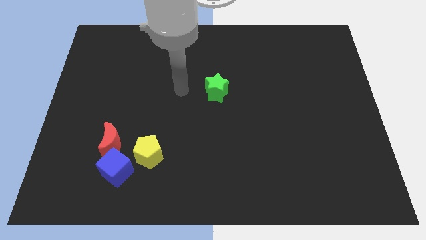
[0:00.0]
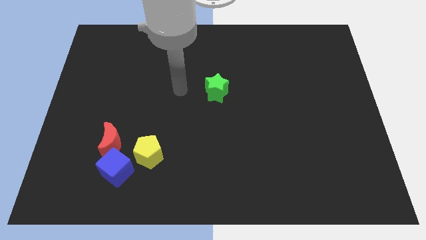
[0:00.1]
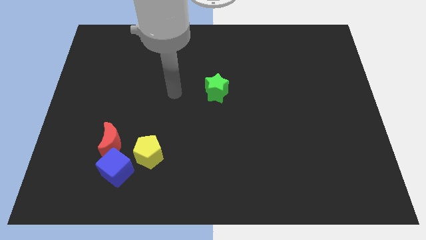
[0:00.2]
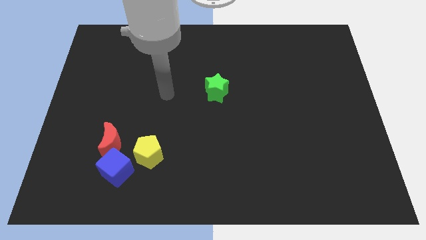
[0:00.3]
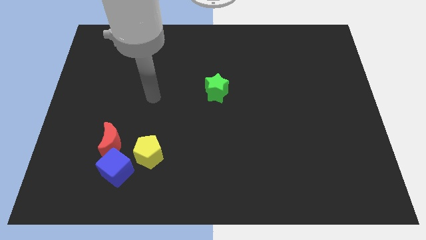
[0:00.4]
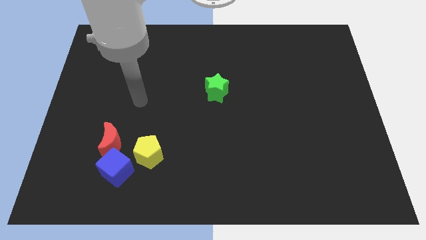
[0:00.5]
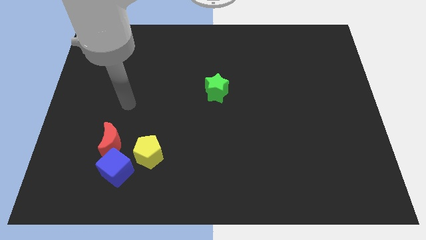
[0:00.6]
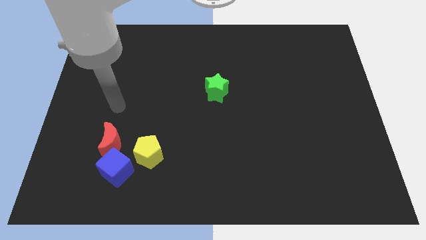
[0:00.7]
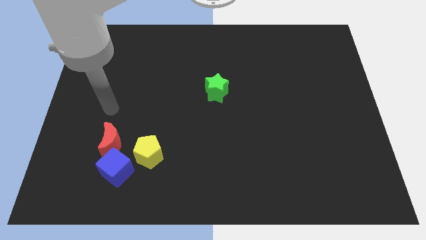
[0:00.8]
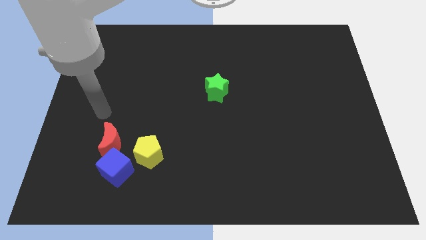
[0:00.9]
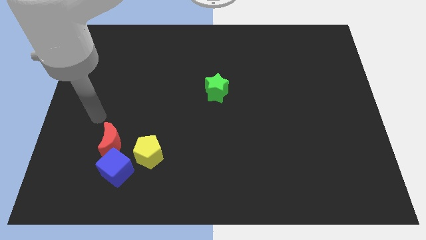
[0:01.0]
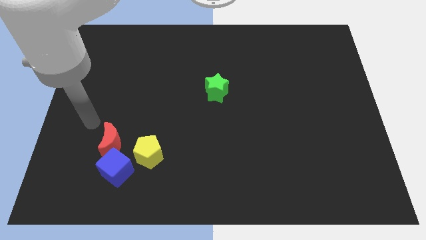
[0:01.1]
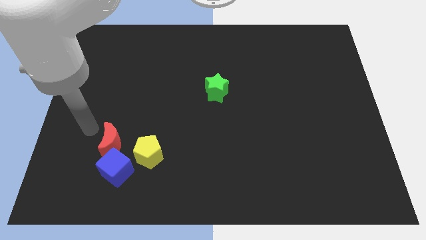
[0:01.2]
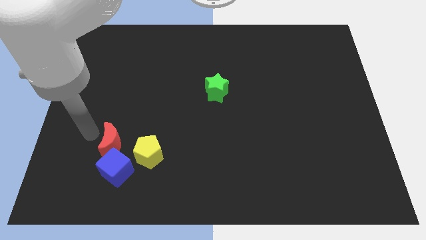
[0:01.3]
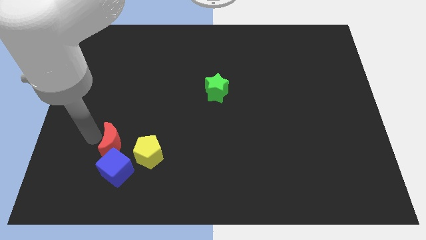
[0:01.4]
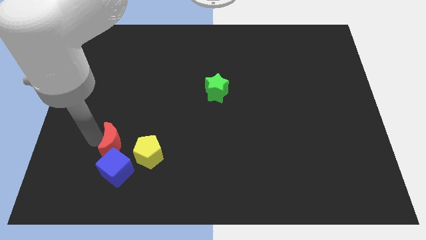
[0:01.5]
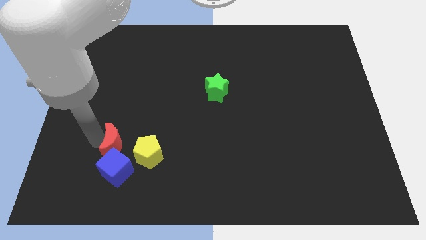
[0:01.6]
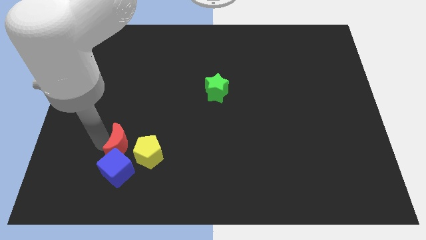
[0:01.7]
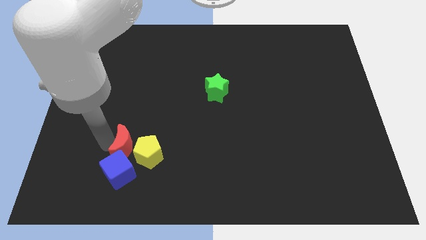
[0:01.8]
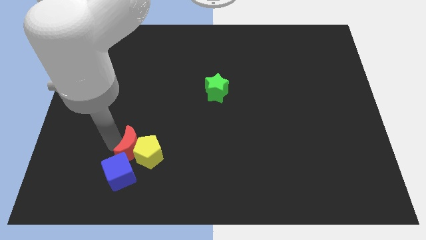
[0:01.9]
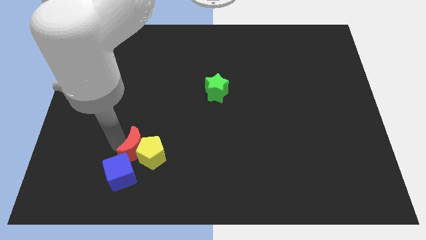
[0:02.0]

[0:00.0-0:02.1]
slide the red block to the yellow block

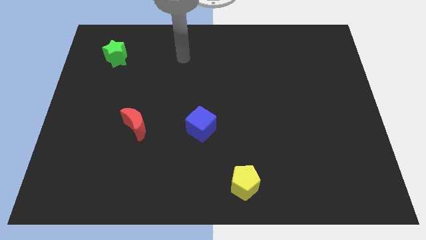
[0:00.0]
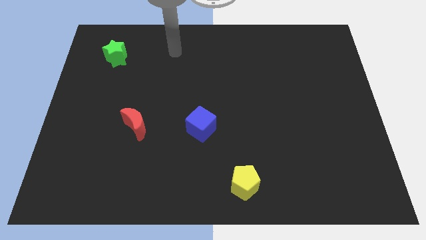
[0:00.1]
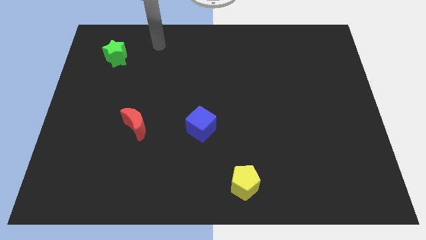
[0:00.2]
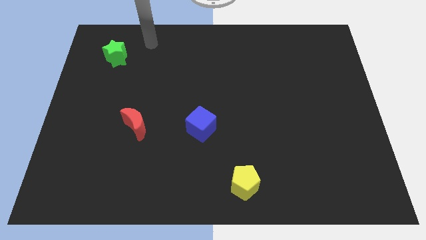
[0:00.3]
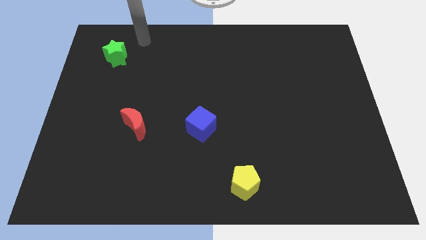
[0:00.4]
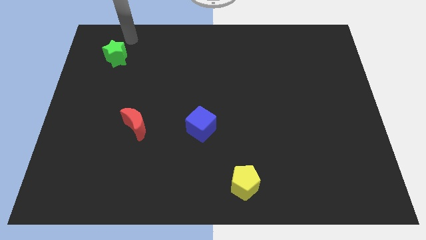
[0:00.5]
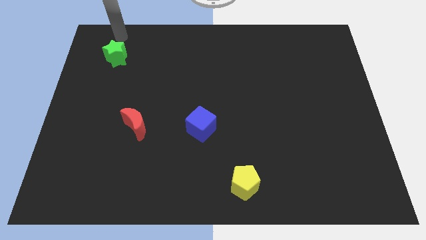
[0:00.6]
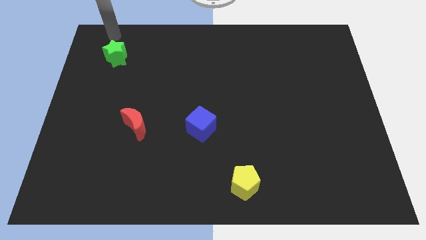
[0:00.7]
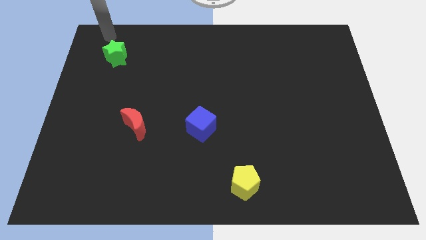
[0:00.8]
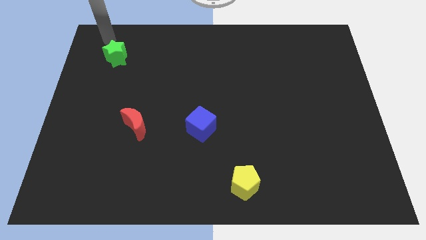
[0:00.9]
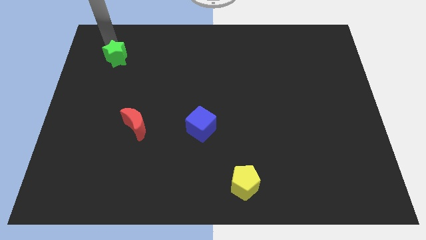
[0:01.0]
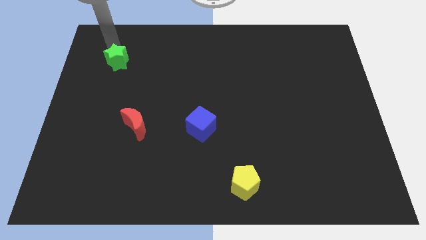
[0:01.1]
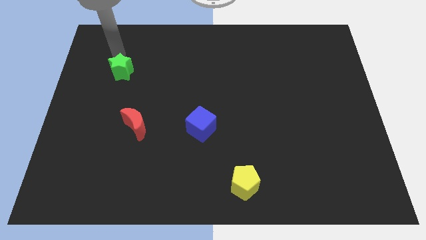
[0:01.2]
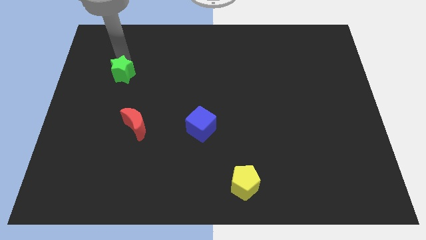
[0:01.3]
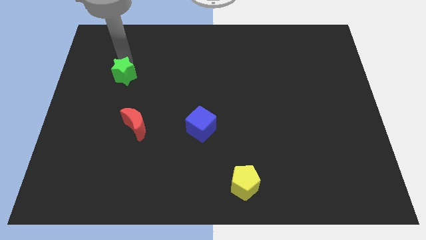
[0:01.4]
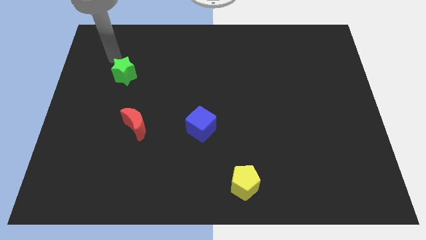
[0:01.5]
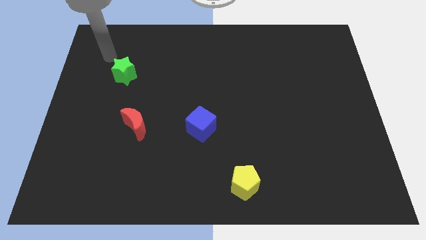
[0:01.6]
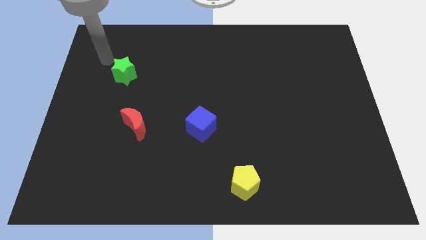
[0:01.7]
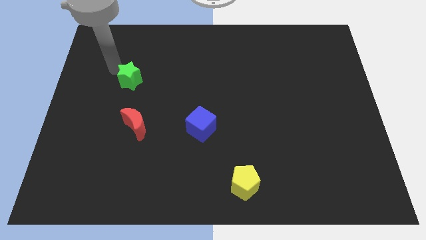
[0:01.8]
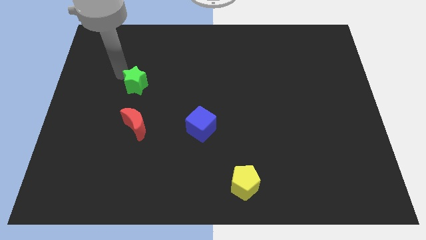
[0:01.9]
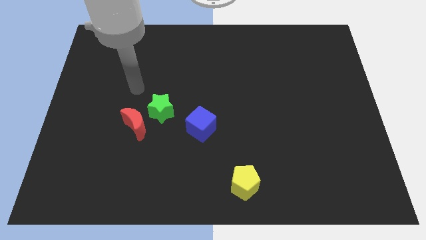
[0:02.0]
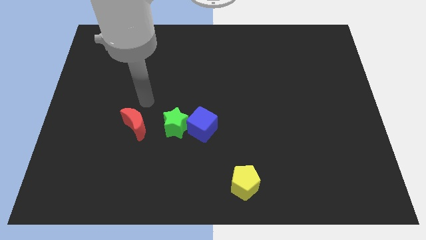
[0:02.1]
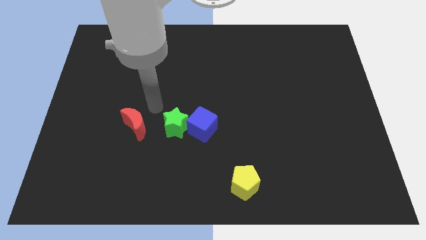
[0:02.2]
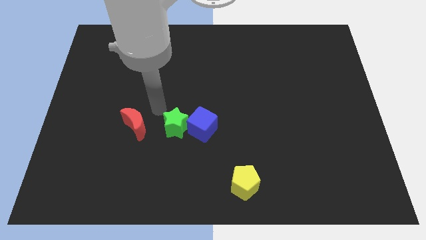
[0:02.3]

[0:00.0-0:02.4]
push the star close to the cube

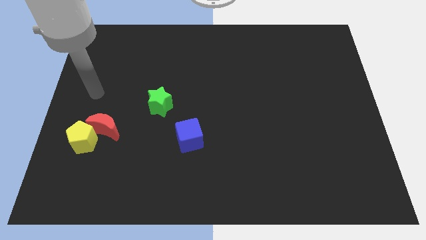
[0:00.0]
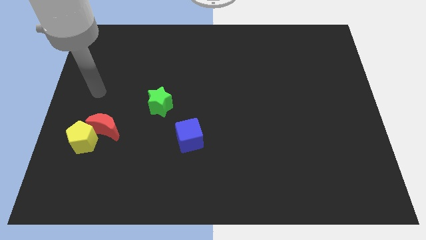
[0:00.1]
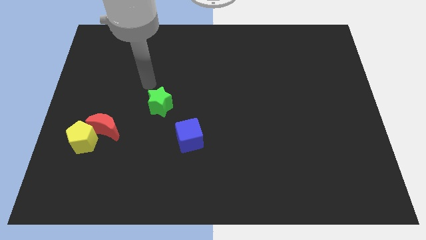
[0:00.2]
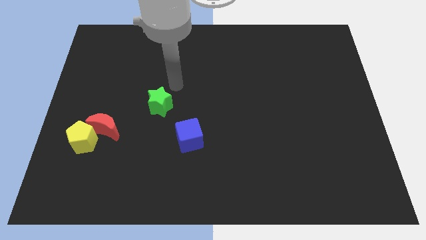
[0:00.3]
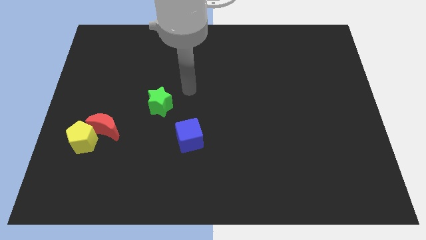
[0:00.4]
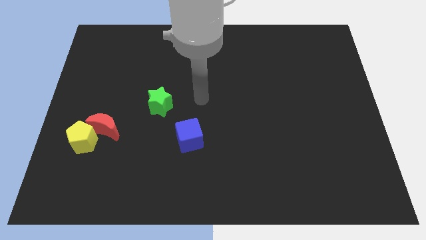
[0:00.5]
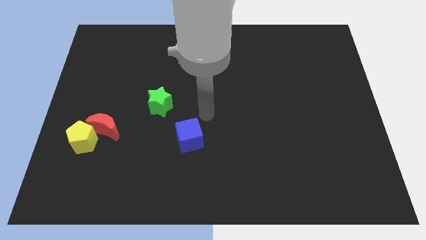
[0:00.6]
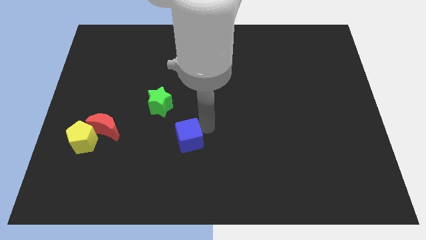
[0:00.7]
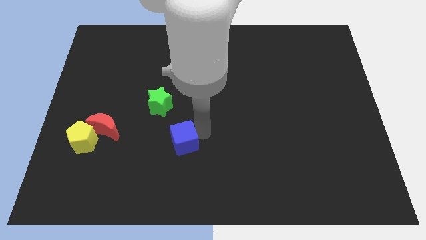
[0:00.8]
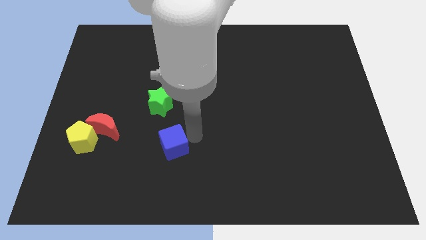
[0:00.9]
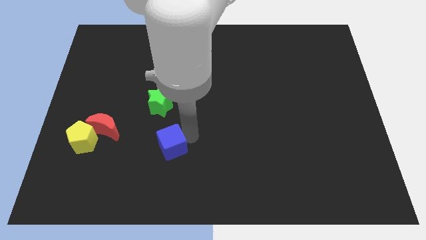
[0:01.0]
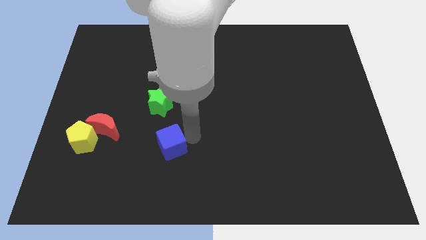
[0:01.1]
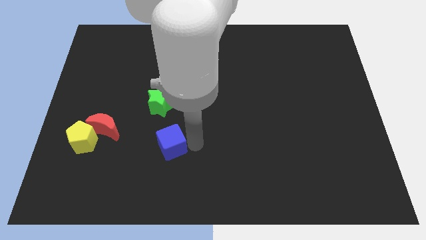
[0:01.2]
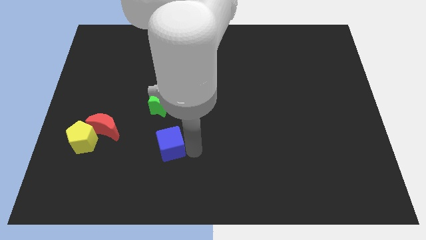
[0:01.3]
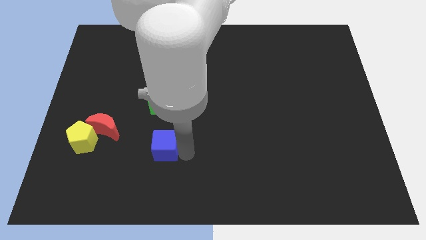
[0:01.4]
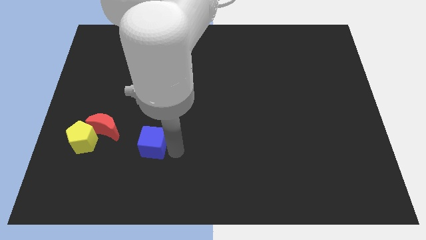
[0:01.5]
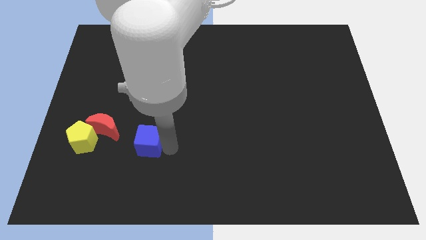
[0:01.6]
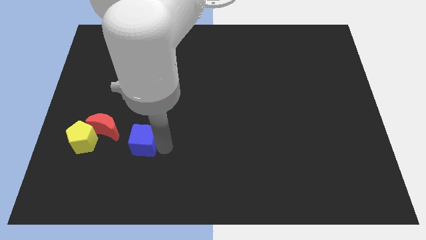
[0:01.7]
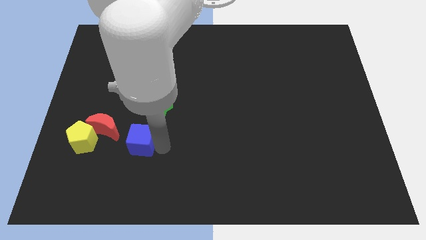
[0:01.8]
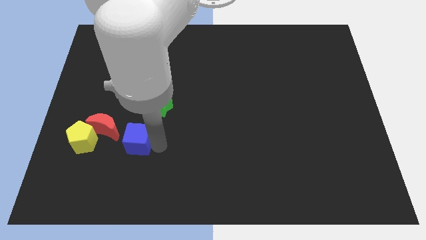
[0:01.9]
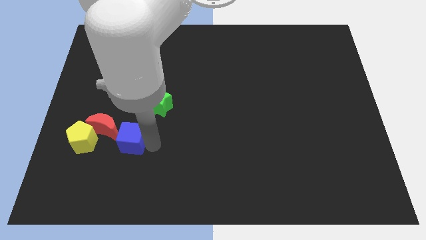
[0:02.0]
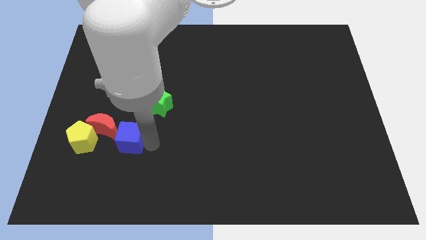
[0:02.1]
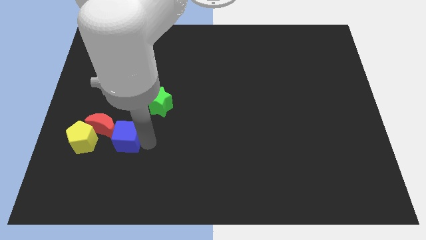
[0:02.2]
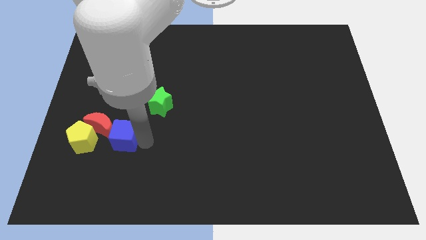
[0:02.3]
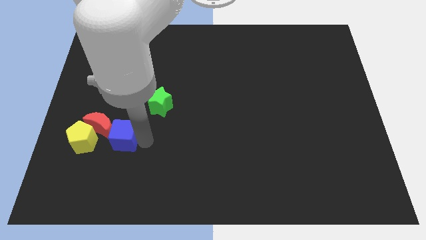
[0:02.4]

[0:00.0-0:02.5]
move the cube to the red block

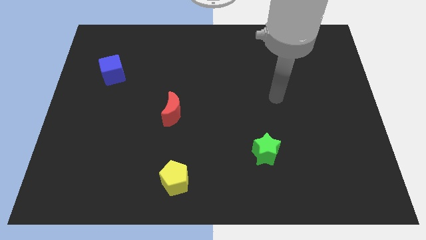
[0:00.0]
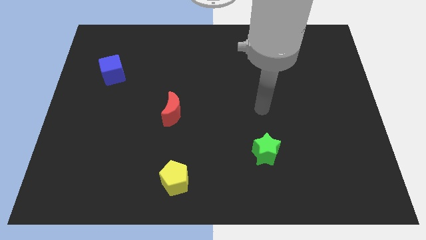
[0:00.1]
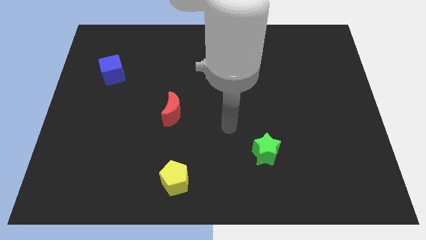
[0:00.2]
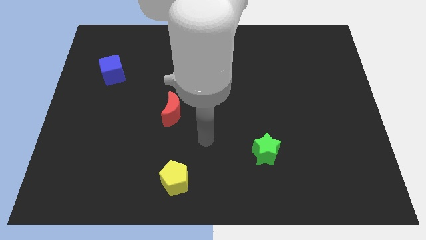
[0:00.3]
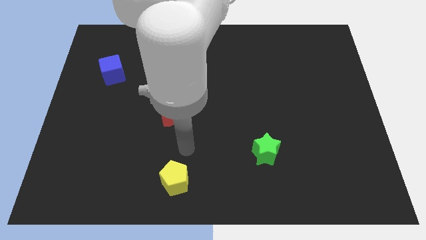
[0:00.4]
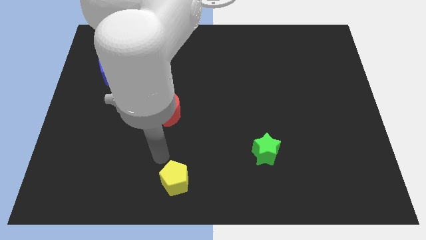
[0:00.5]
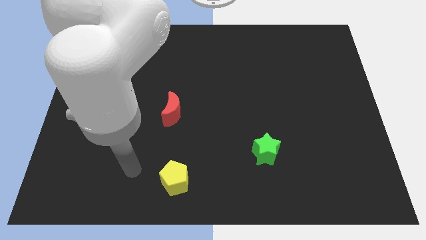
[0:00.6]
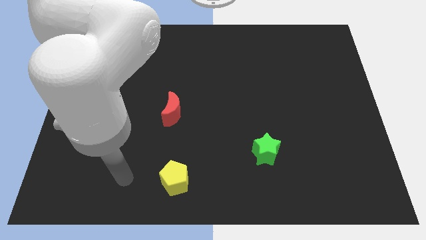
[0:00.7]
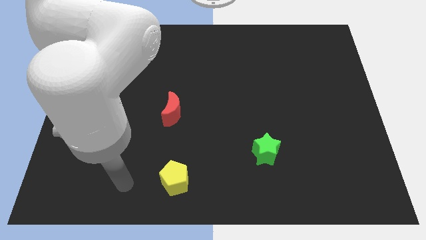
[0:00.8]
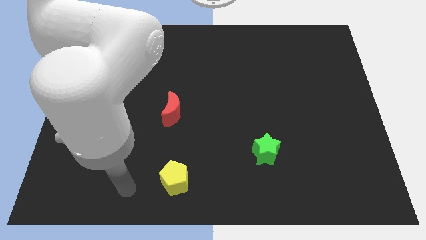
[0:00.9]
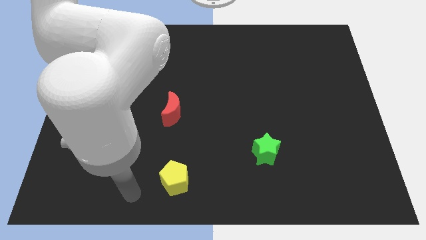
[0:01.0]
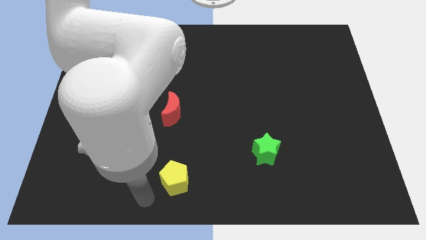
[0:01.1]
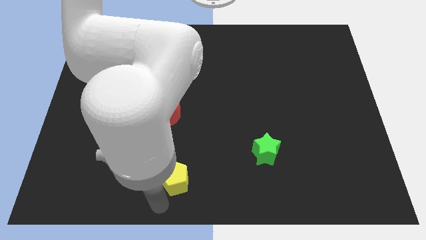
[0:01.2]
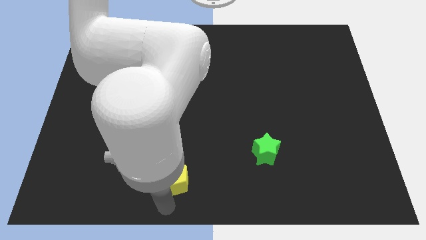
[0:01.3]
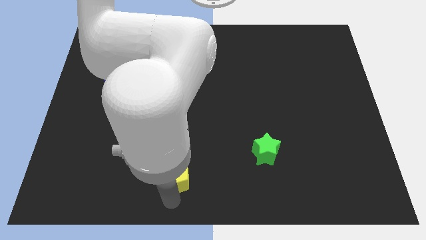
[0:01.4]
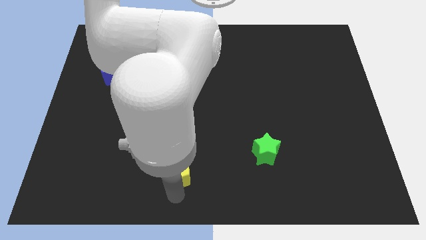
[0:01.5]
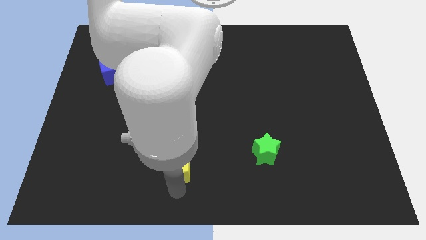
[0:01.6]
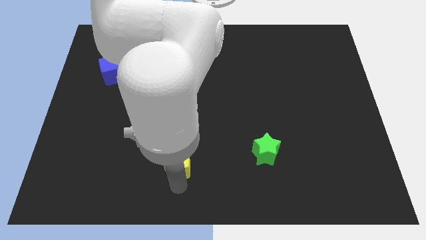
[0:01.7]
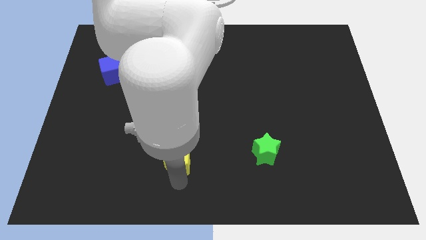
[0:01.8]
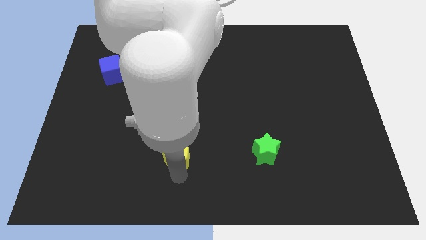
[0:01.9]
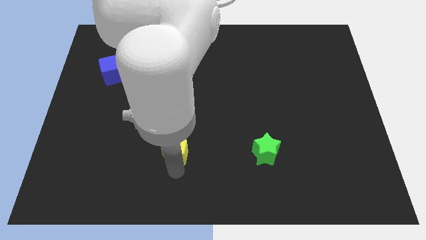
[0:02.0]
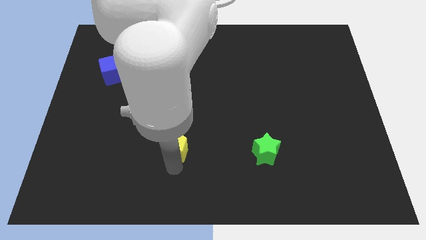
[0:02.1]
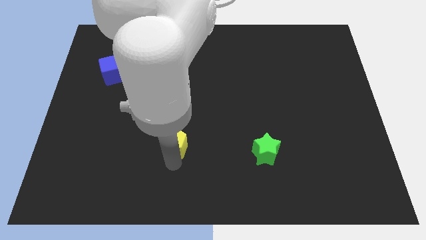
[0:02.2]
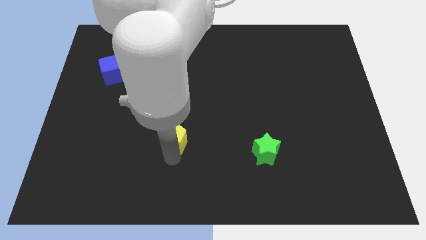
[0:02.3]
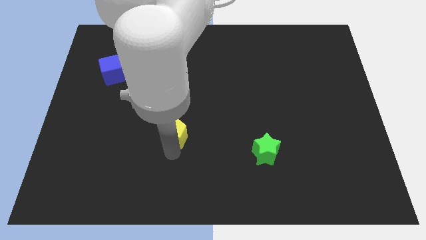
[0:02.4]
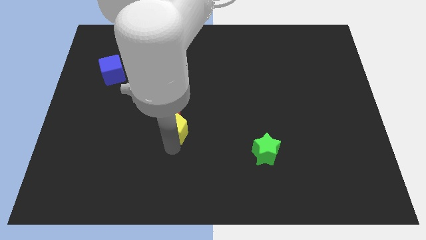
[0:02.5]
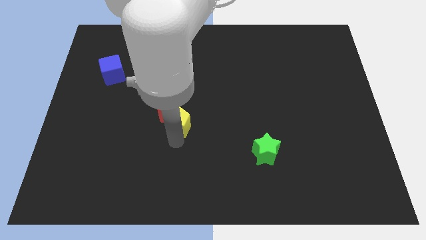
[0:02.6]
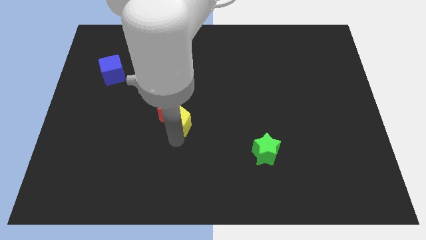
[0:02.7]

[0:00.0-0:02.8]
slide the pentagon towards the red block
